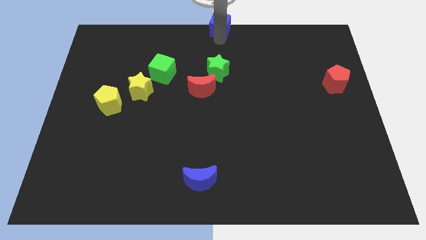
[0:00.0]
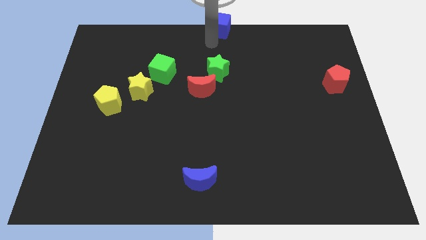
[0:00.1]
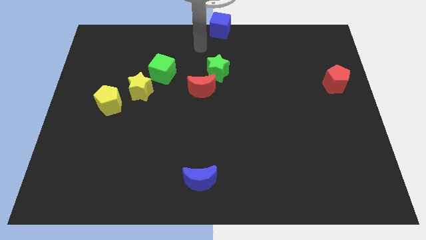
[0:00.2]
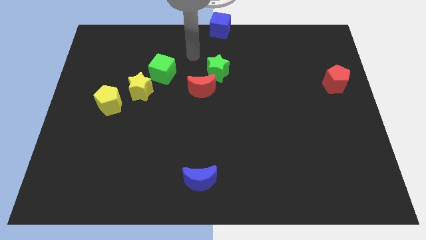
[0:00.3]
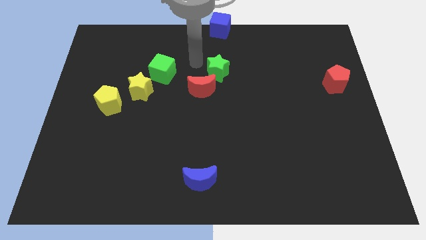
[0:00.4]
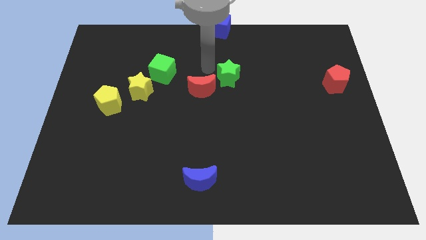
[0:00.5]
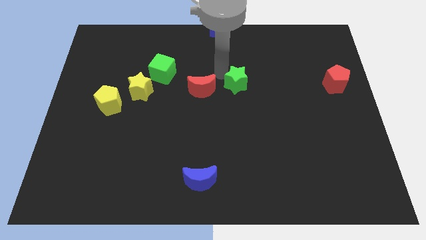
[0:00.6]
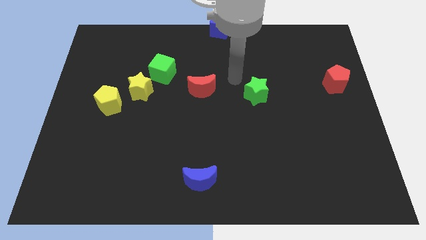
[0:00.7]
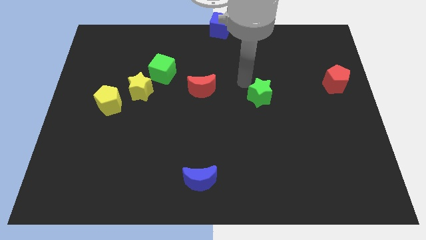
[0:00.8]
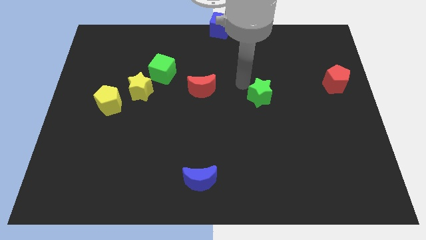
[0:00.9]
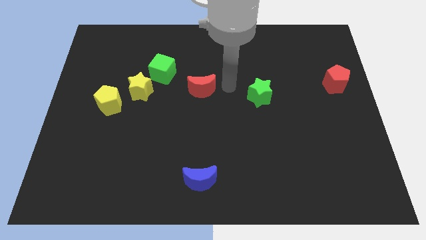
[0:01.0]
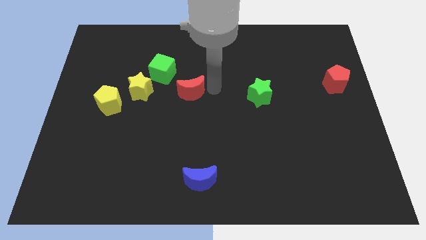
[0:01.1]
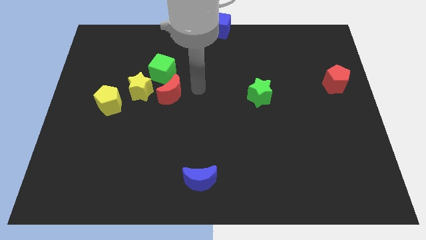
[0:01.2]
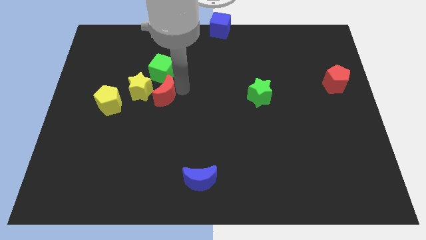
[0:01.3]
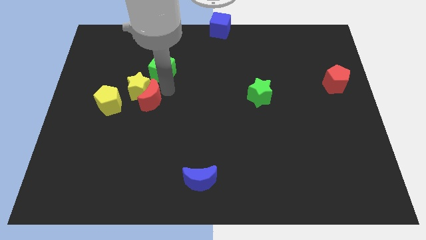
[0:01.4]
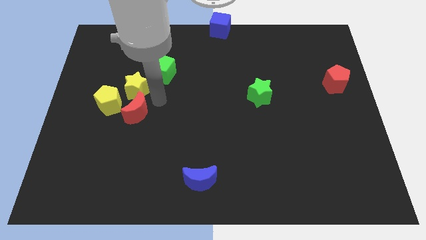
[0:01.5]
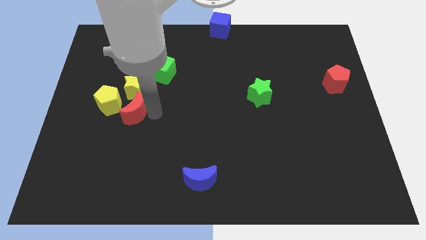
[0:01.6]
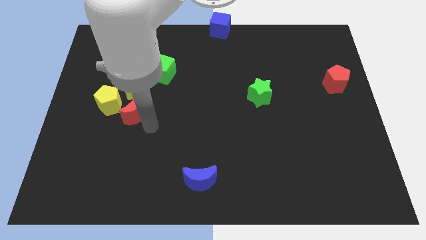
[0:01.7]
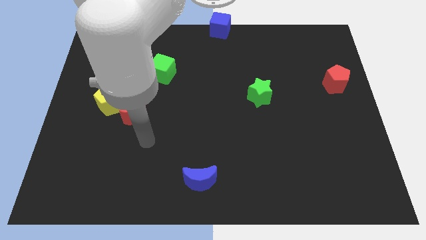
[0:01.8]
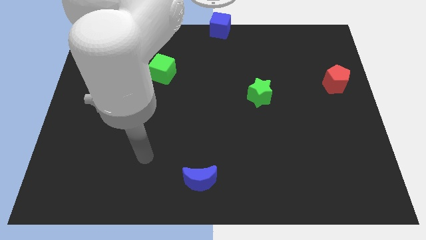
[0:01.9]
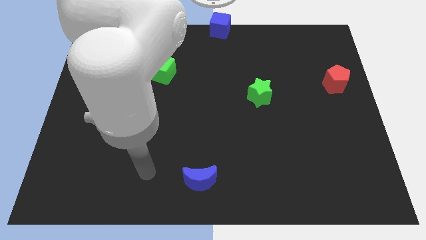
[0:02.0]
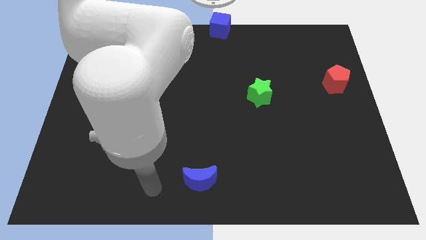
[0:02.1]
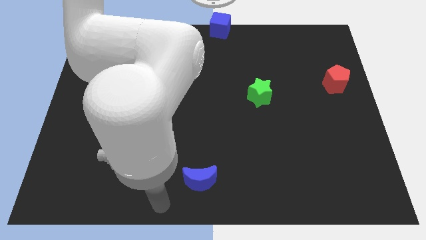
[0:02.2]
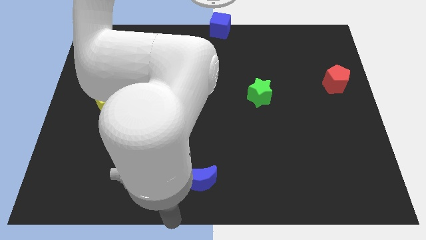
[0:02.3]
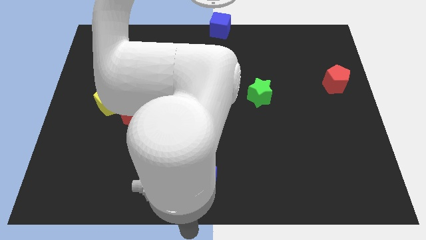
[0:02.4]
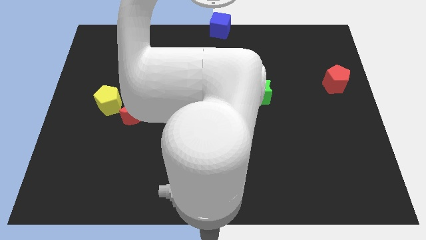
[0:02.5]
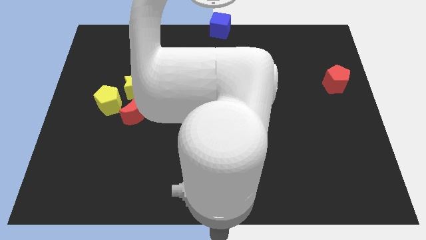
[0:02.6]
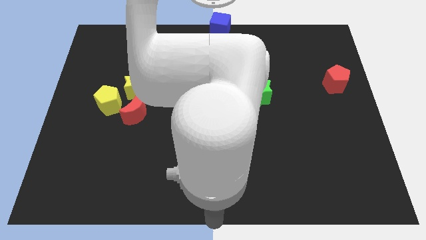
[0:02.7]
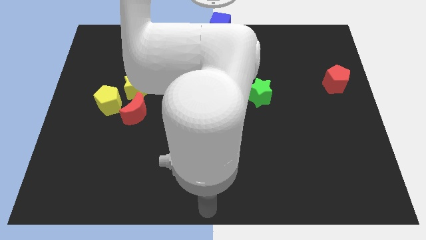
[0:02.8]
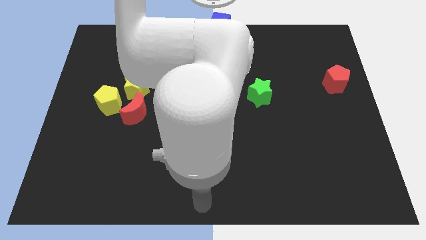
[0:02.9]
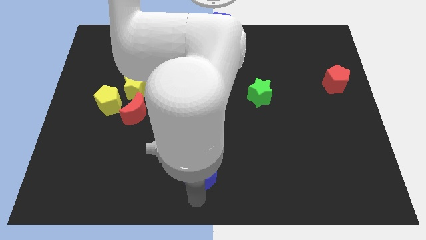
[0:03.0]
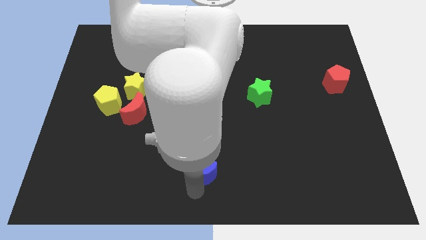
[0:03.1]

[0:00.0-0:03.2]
move green star and the red moon away from each other

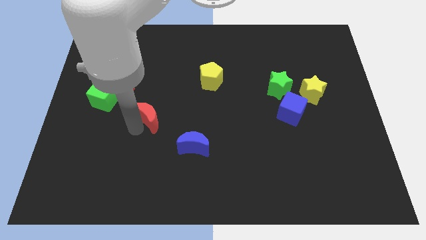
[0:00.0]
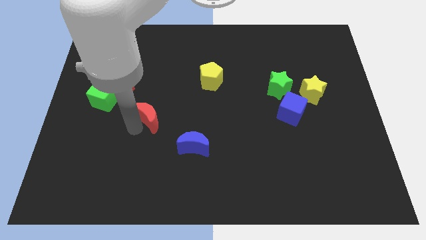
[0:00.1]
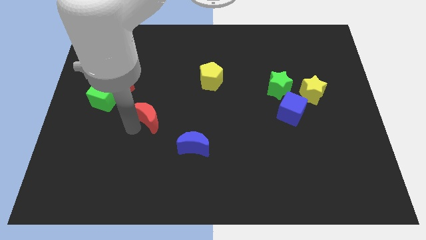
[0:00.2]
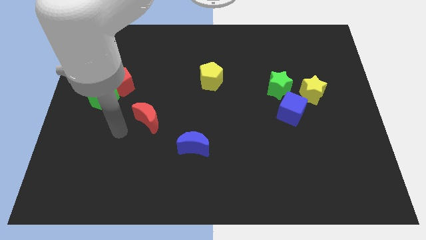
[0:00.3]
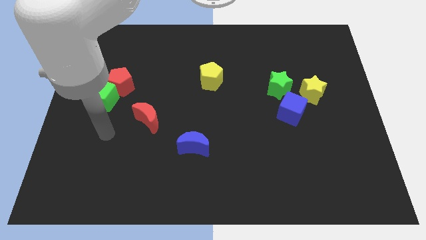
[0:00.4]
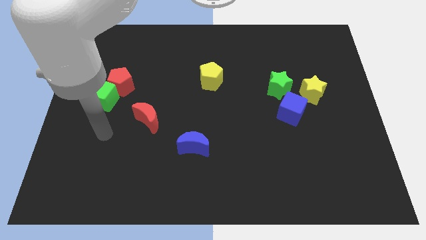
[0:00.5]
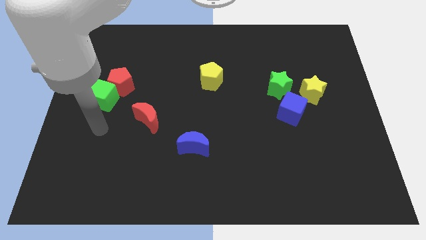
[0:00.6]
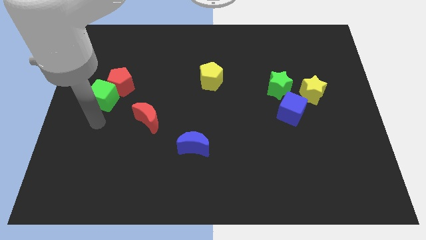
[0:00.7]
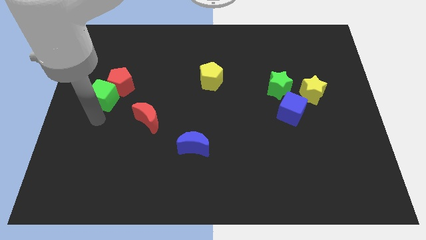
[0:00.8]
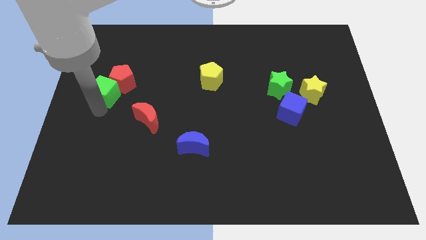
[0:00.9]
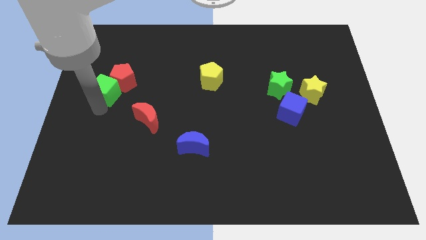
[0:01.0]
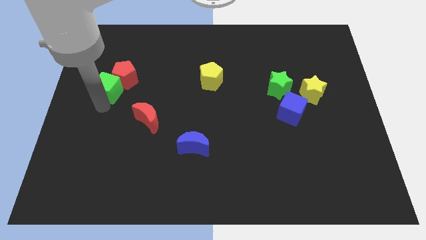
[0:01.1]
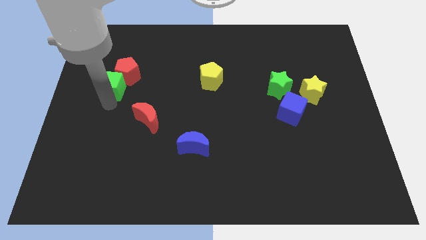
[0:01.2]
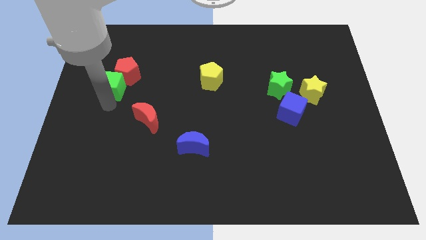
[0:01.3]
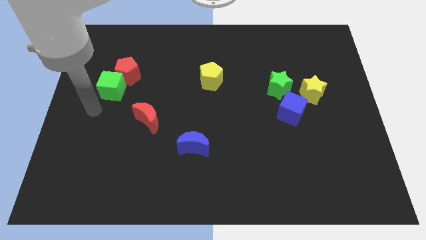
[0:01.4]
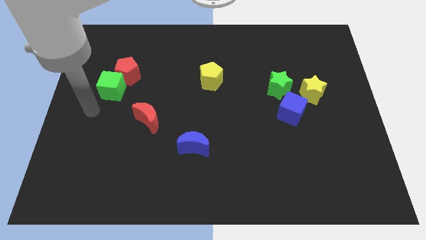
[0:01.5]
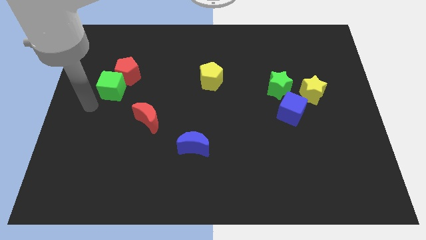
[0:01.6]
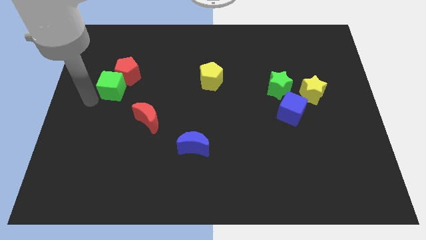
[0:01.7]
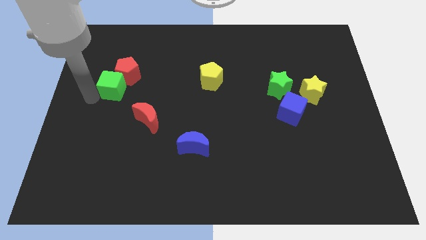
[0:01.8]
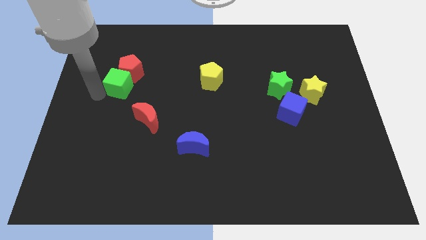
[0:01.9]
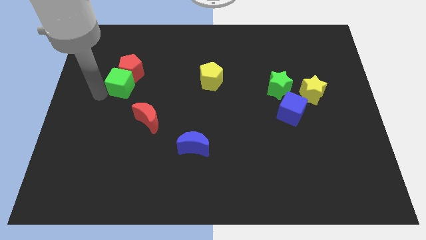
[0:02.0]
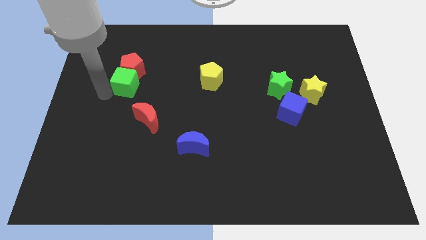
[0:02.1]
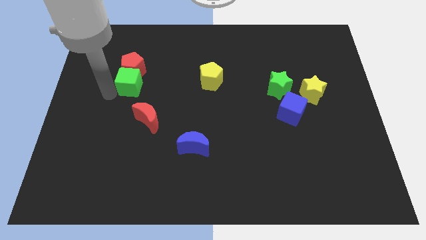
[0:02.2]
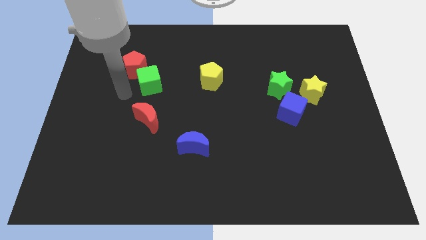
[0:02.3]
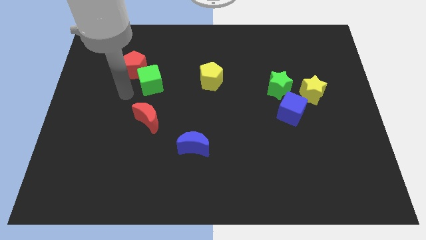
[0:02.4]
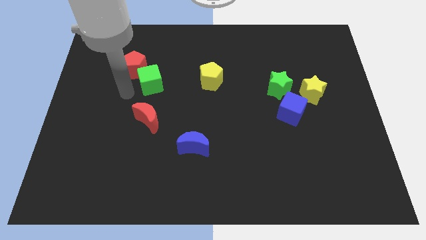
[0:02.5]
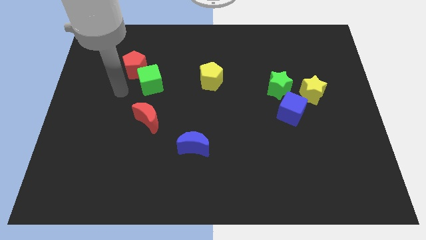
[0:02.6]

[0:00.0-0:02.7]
place the green cube to the bottom side of the red pentagon

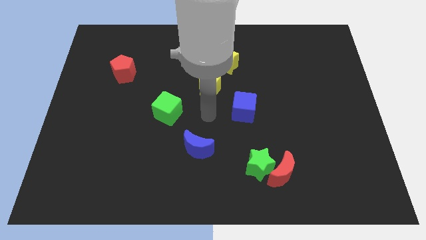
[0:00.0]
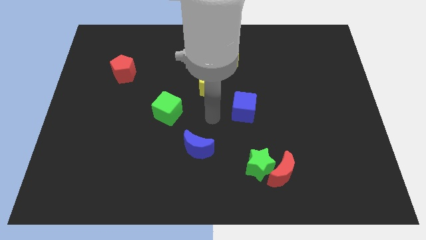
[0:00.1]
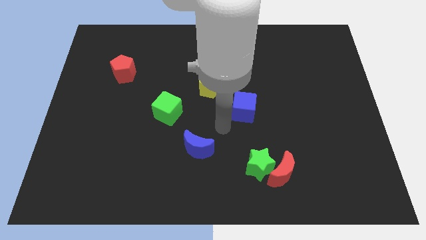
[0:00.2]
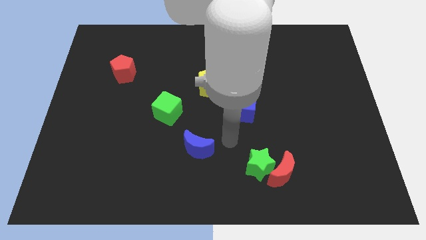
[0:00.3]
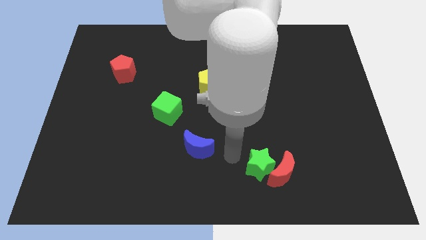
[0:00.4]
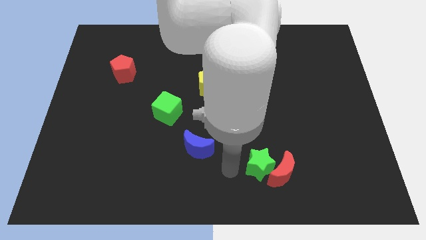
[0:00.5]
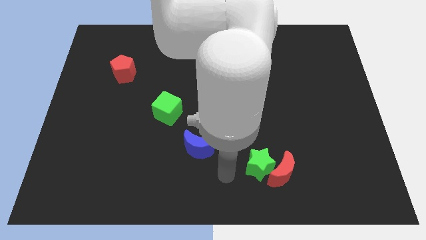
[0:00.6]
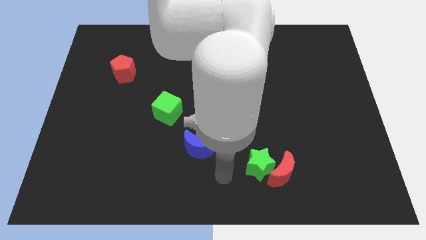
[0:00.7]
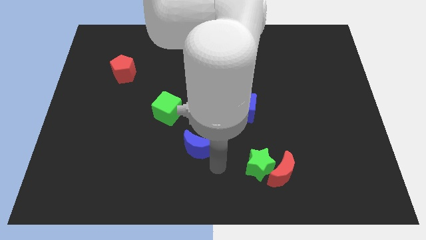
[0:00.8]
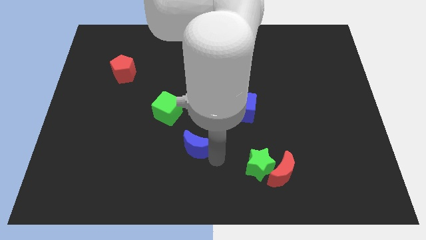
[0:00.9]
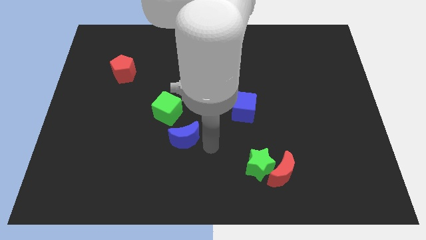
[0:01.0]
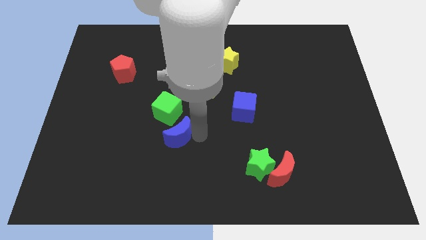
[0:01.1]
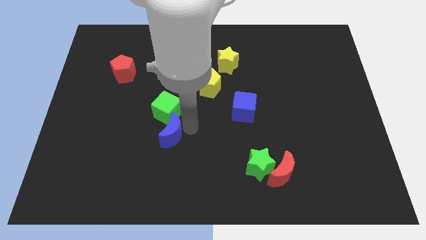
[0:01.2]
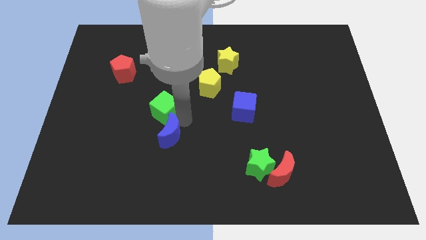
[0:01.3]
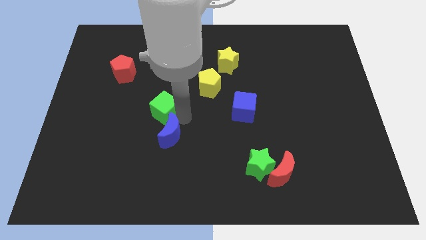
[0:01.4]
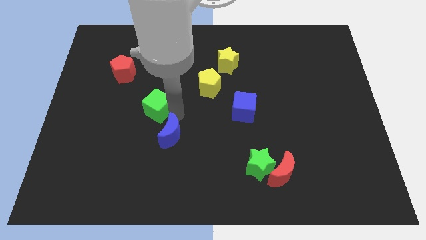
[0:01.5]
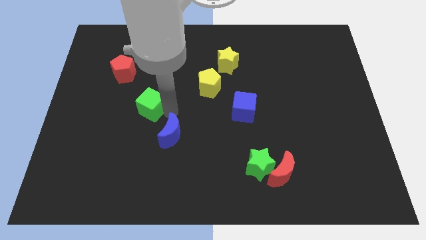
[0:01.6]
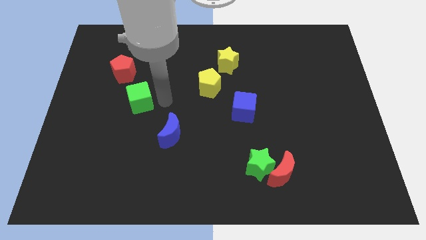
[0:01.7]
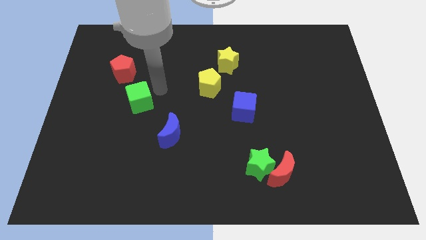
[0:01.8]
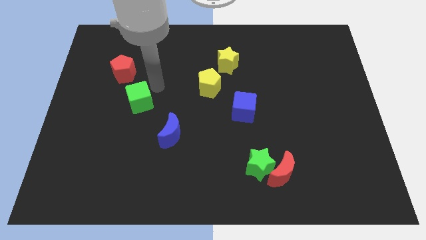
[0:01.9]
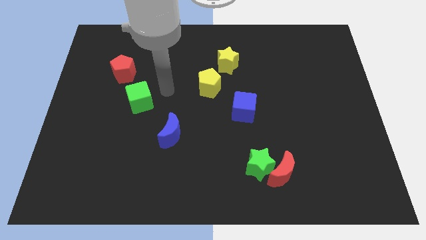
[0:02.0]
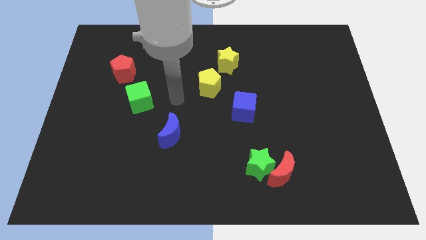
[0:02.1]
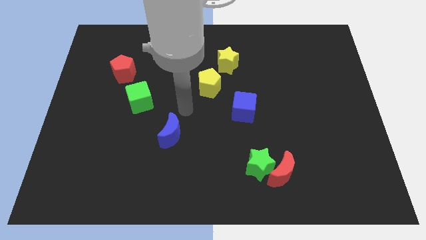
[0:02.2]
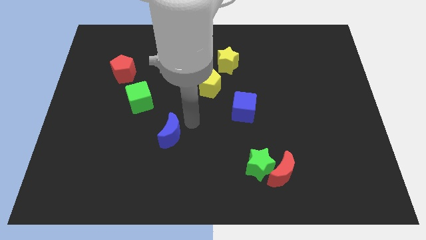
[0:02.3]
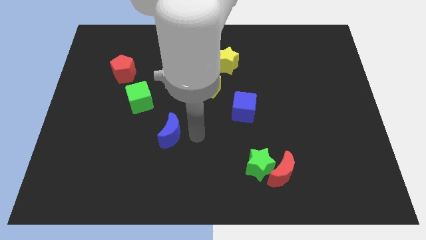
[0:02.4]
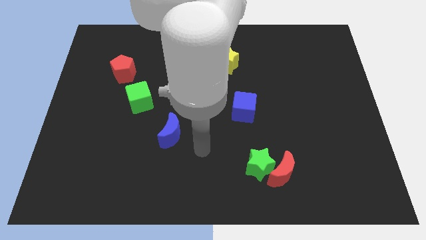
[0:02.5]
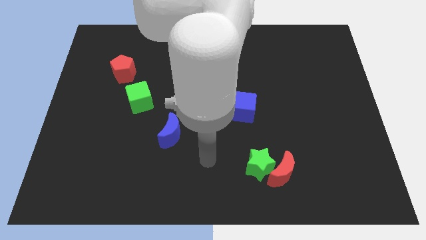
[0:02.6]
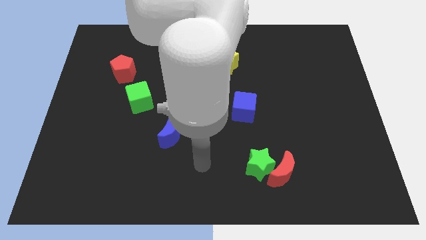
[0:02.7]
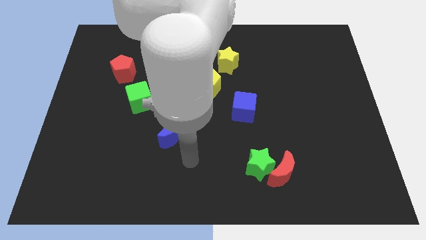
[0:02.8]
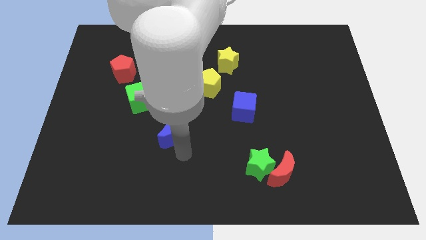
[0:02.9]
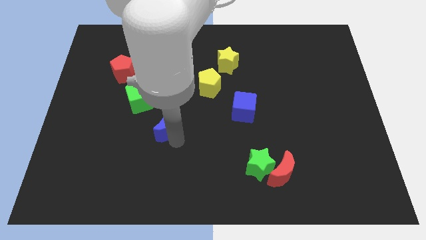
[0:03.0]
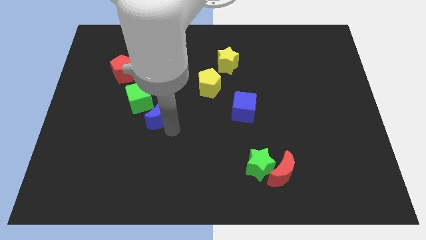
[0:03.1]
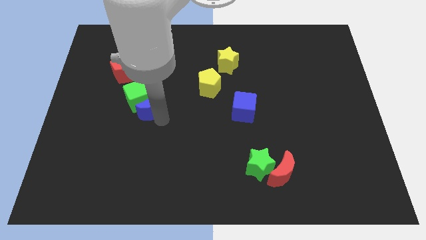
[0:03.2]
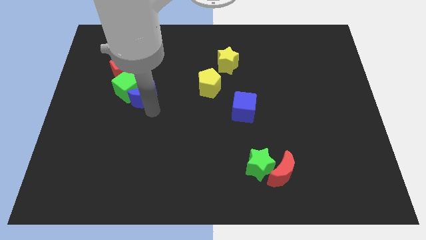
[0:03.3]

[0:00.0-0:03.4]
move the blue crescent into the green cube
